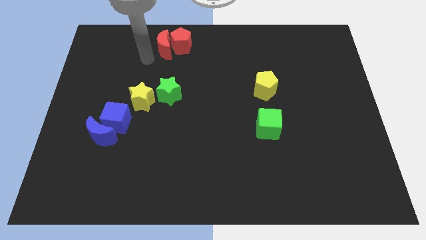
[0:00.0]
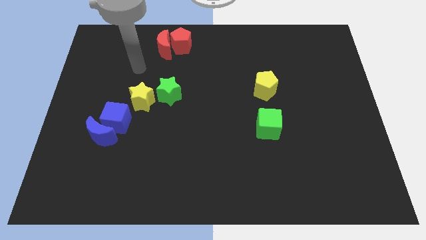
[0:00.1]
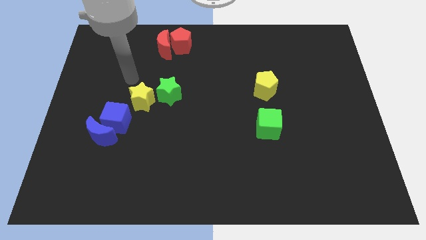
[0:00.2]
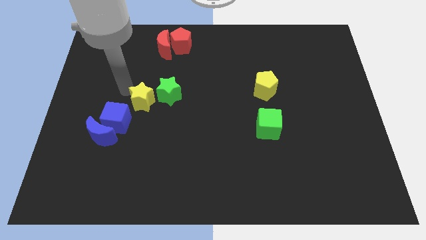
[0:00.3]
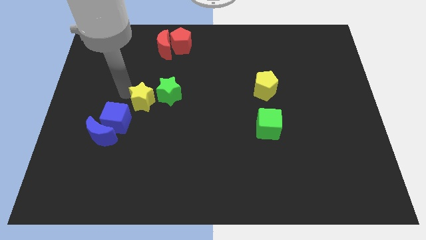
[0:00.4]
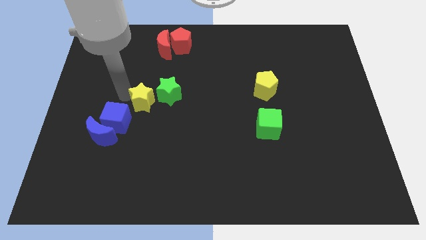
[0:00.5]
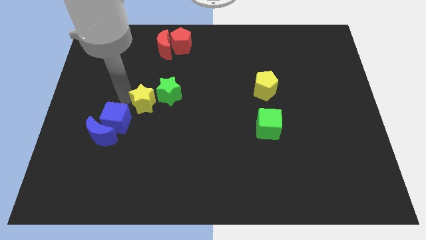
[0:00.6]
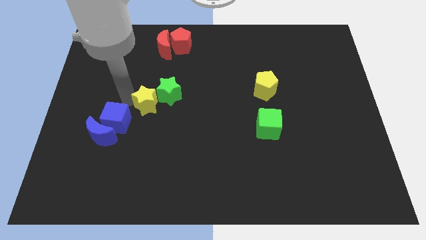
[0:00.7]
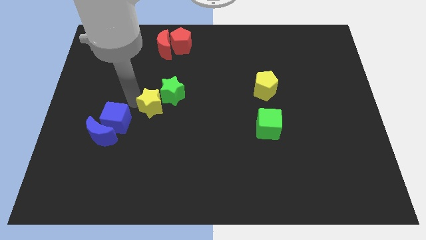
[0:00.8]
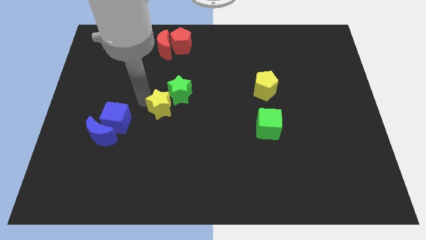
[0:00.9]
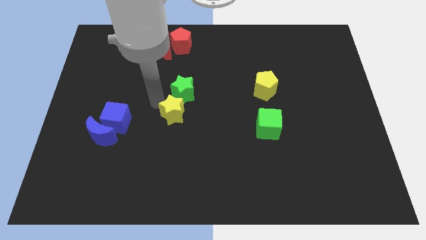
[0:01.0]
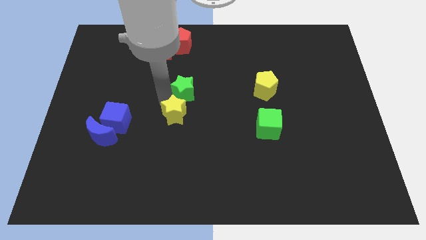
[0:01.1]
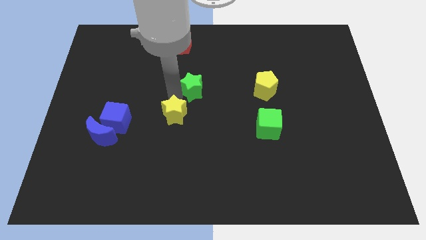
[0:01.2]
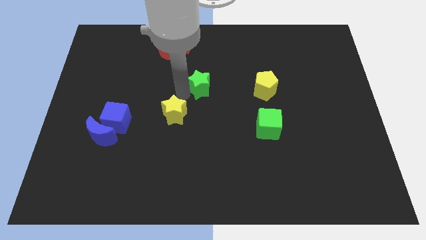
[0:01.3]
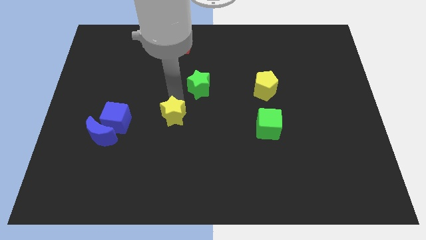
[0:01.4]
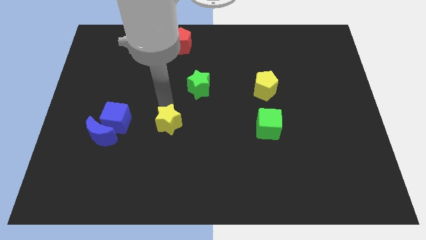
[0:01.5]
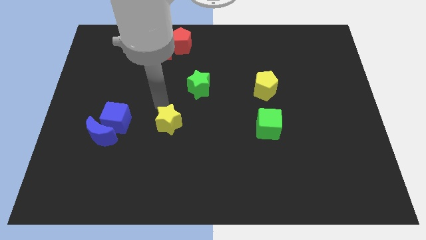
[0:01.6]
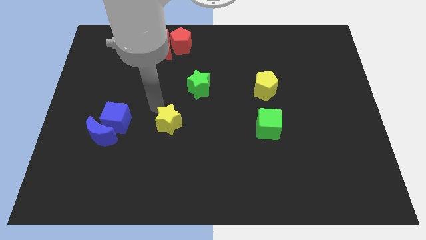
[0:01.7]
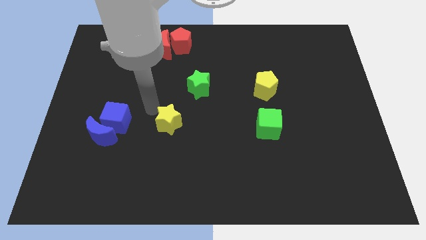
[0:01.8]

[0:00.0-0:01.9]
separate the green star from the yellow star

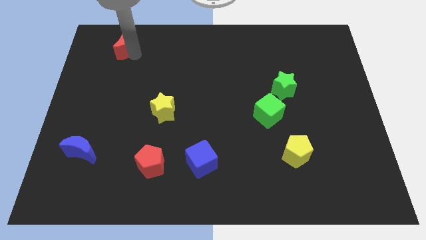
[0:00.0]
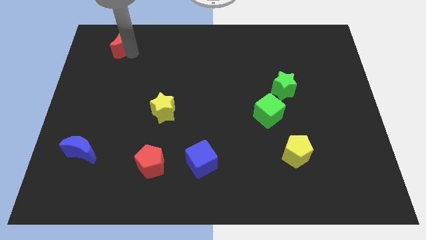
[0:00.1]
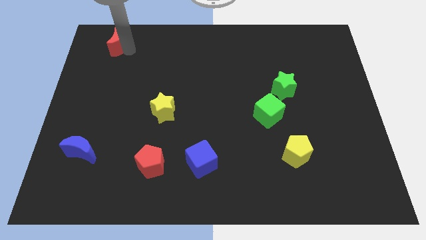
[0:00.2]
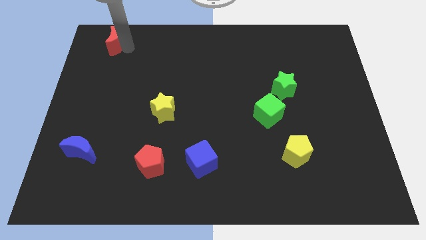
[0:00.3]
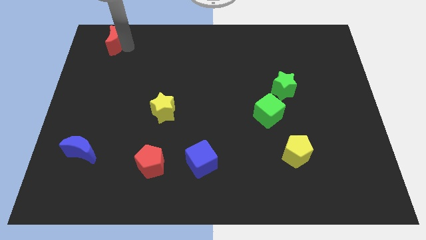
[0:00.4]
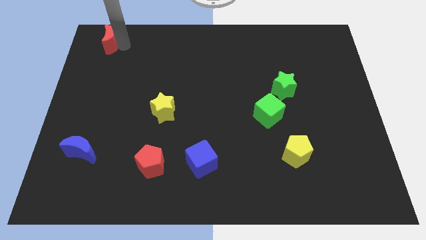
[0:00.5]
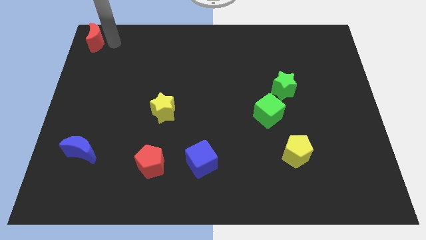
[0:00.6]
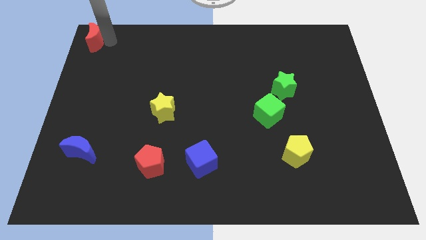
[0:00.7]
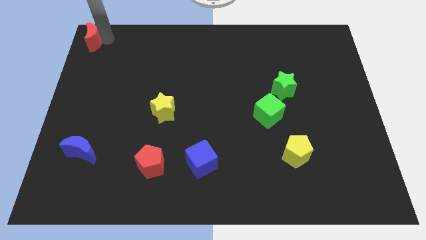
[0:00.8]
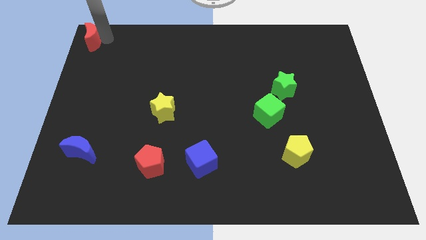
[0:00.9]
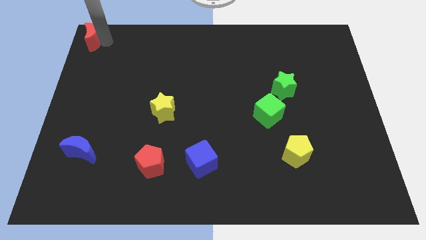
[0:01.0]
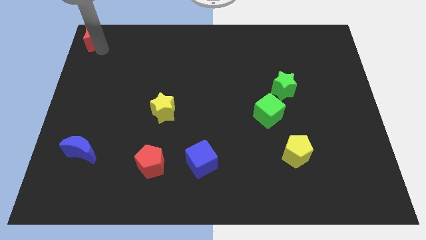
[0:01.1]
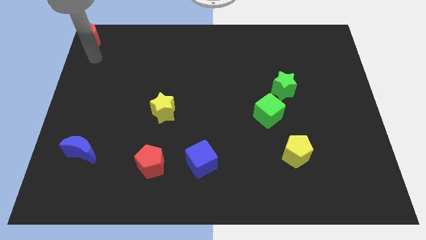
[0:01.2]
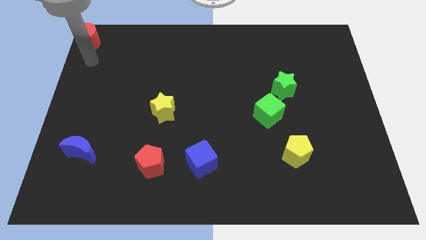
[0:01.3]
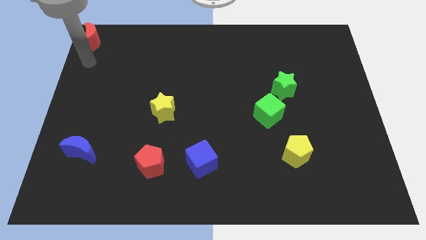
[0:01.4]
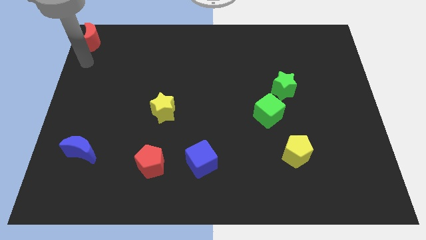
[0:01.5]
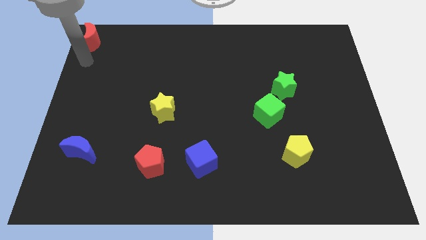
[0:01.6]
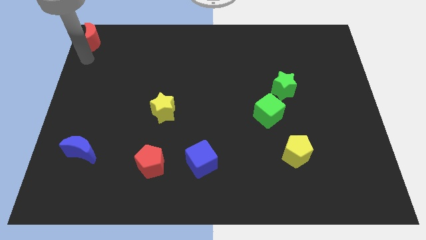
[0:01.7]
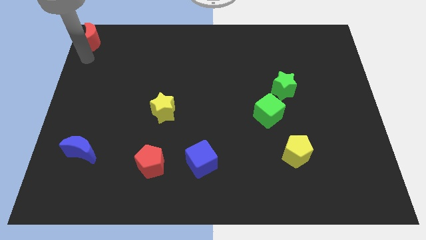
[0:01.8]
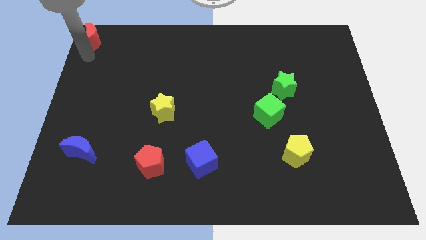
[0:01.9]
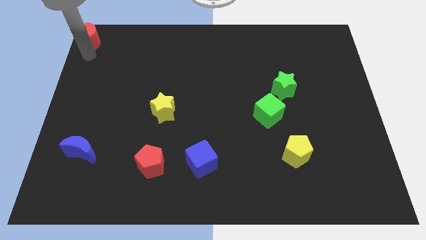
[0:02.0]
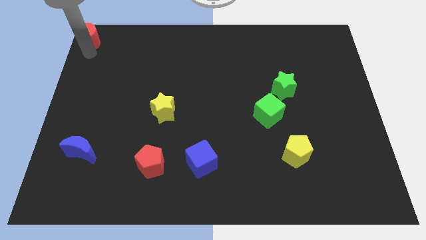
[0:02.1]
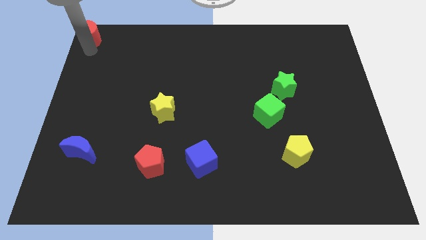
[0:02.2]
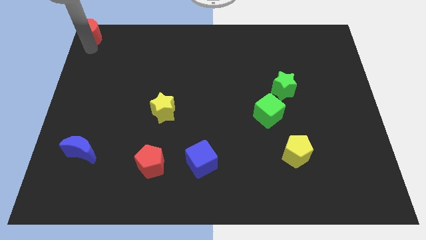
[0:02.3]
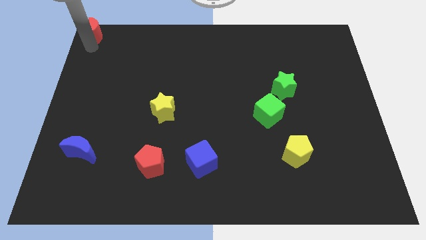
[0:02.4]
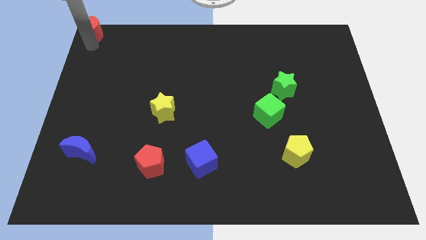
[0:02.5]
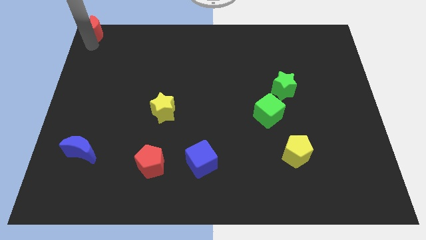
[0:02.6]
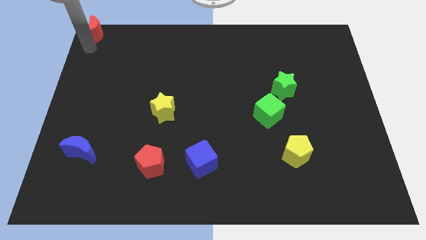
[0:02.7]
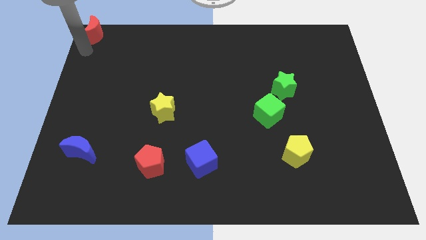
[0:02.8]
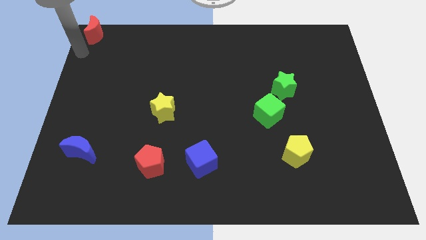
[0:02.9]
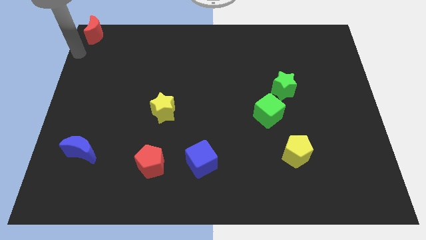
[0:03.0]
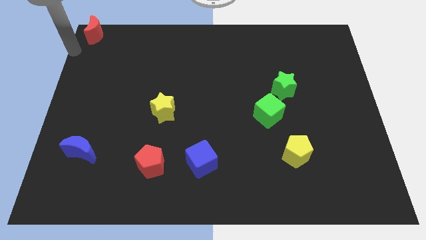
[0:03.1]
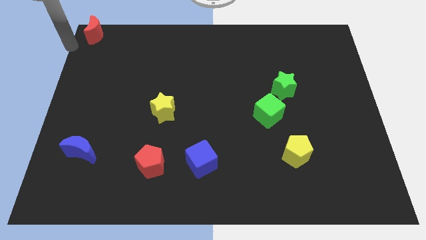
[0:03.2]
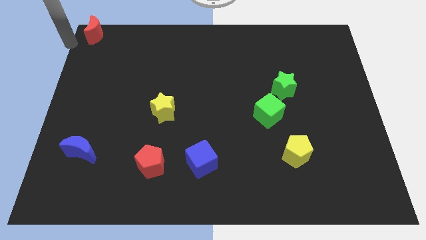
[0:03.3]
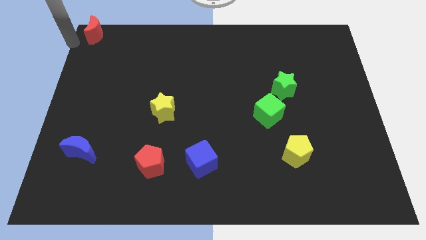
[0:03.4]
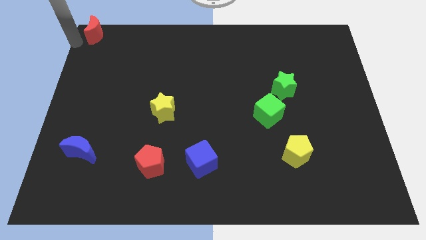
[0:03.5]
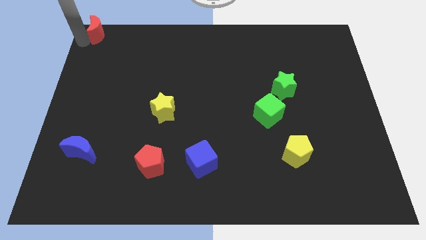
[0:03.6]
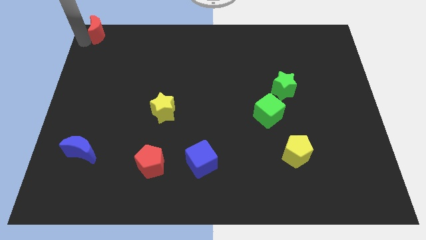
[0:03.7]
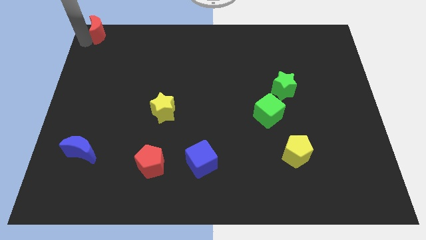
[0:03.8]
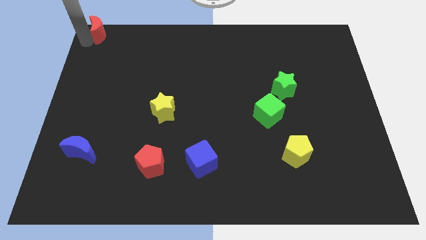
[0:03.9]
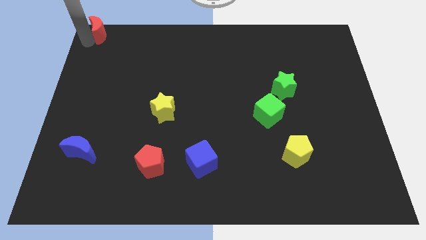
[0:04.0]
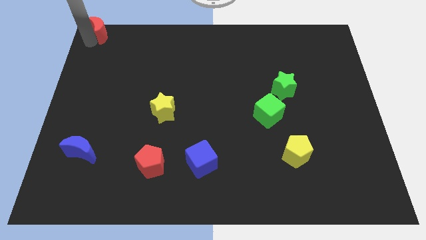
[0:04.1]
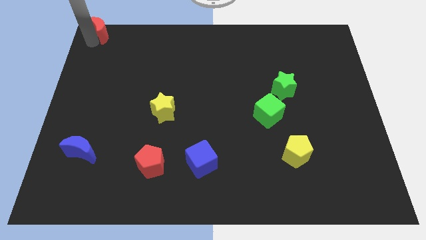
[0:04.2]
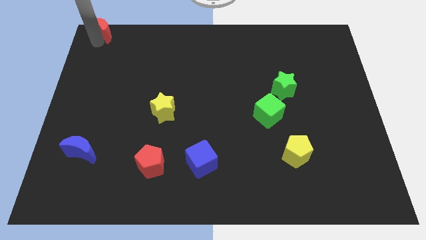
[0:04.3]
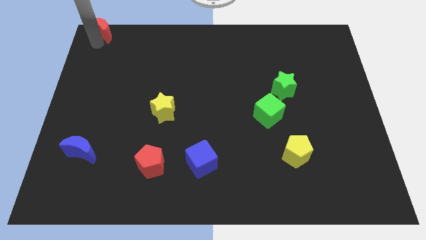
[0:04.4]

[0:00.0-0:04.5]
move red moon to the top left corner

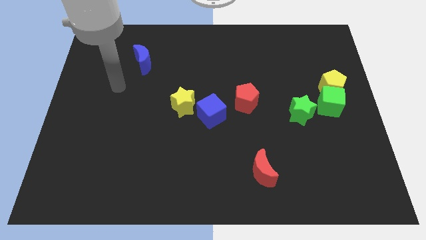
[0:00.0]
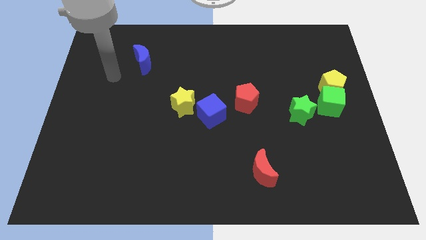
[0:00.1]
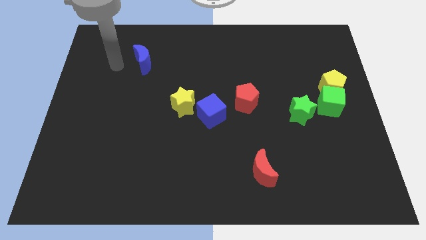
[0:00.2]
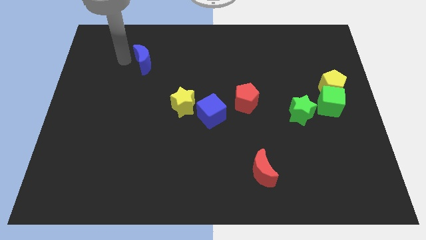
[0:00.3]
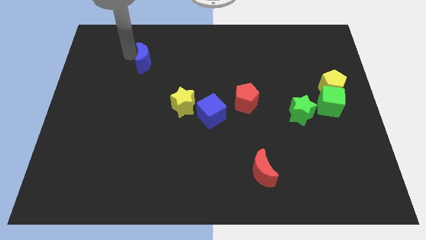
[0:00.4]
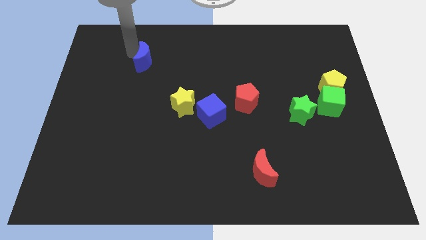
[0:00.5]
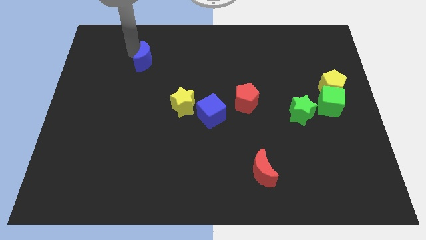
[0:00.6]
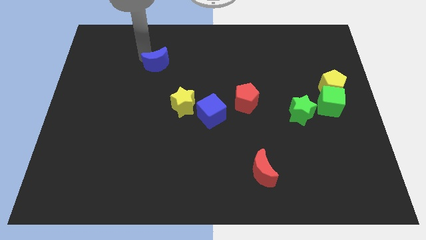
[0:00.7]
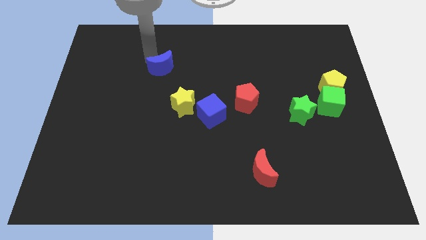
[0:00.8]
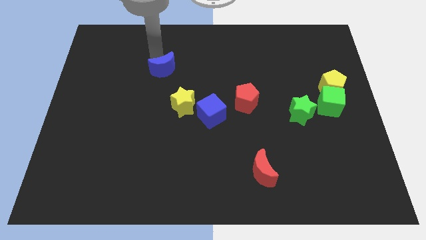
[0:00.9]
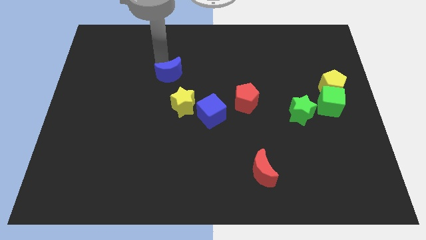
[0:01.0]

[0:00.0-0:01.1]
push blue moon slightly to the bottom of the board

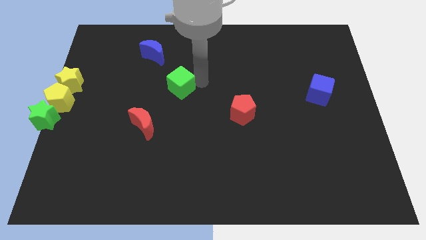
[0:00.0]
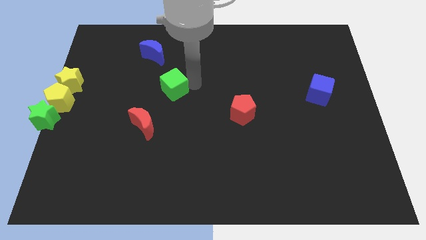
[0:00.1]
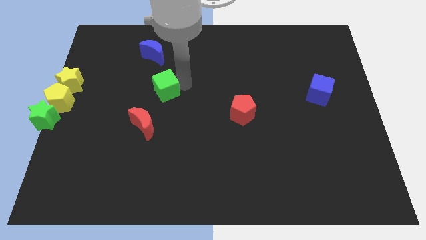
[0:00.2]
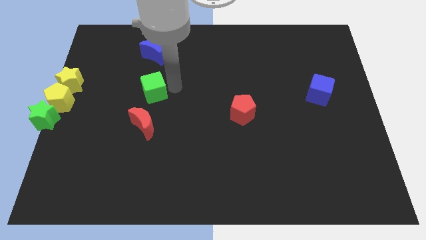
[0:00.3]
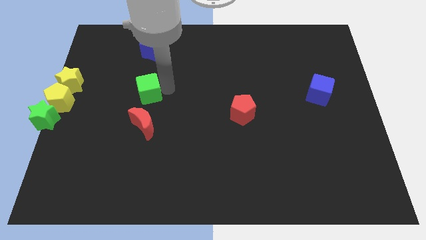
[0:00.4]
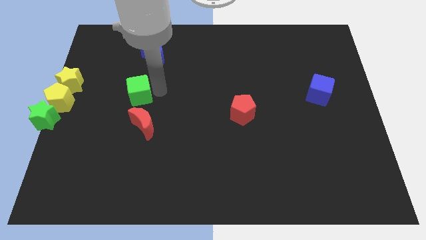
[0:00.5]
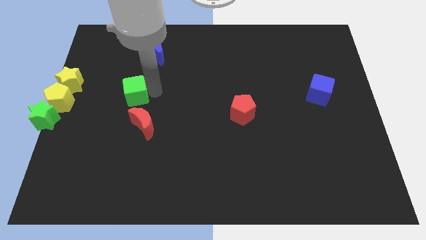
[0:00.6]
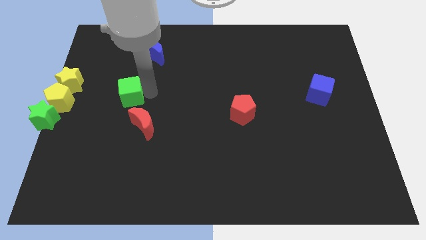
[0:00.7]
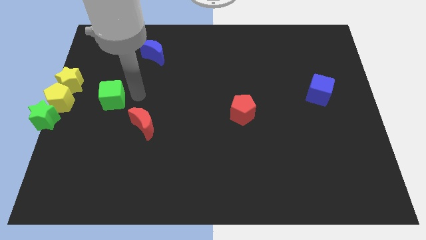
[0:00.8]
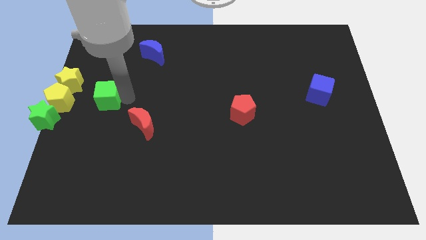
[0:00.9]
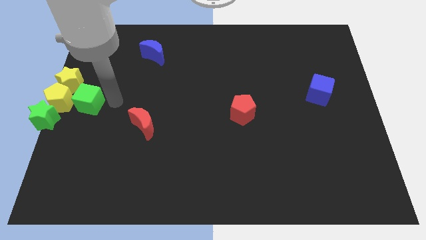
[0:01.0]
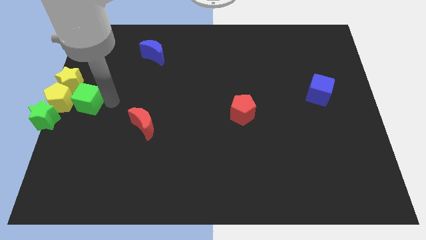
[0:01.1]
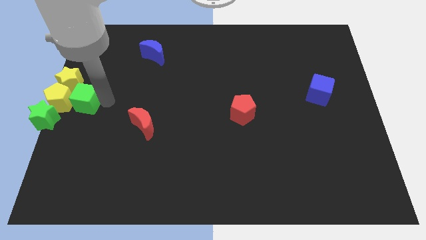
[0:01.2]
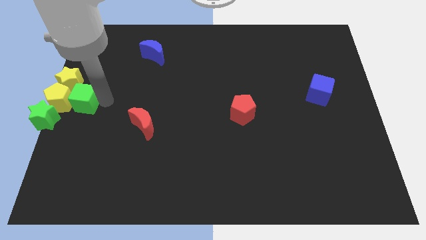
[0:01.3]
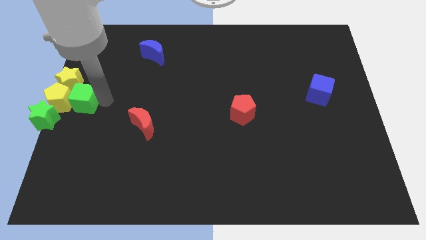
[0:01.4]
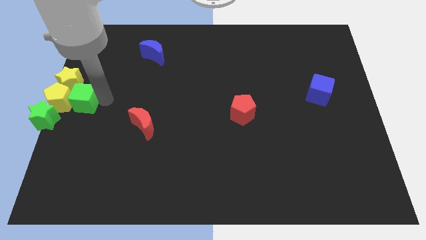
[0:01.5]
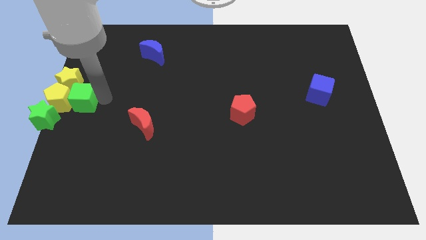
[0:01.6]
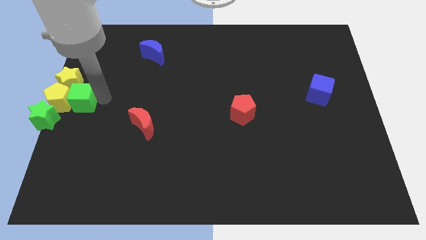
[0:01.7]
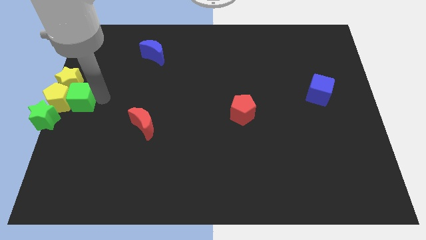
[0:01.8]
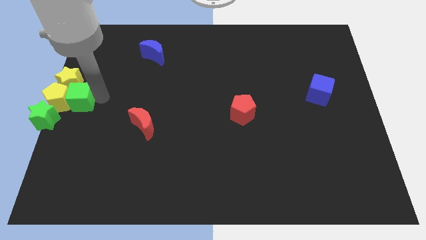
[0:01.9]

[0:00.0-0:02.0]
push the green cube into the yellow pentagon
